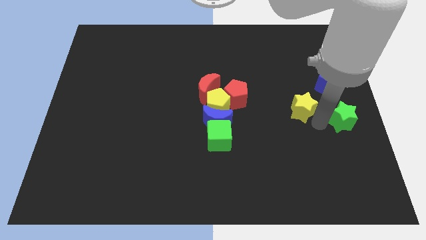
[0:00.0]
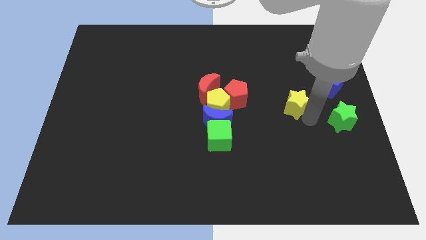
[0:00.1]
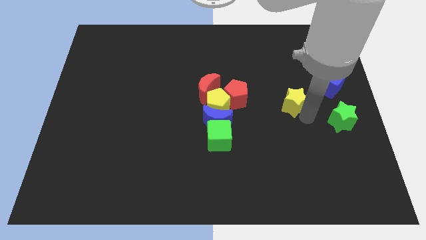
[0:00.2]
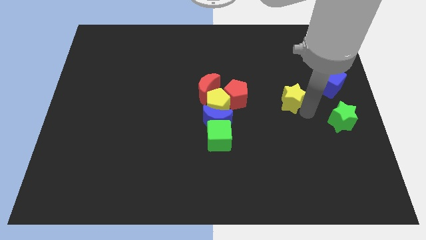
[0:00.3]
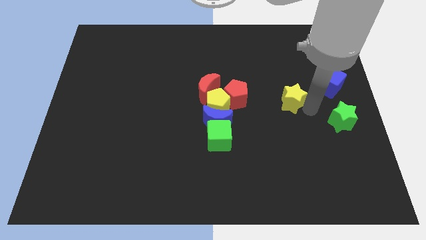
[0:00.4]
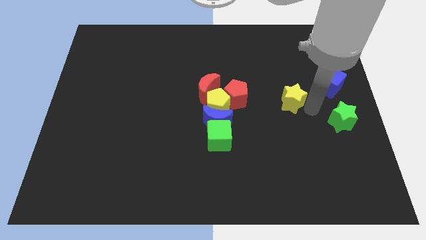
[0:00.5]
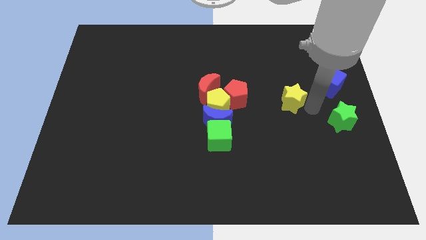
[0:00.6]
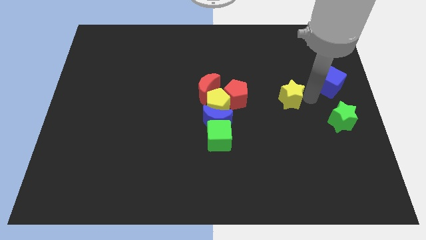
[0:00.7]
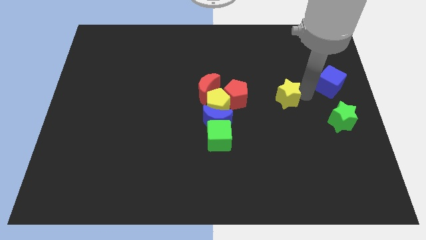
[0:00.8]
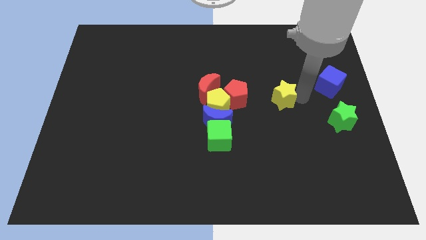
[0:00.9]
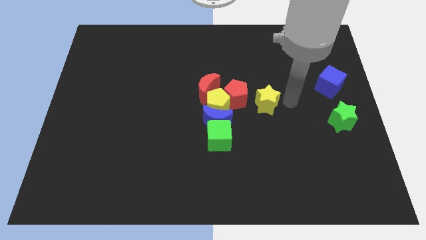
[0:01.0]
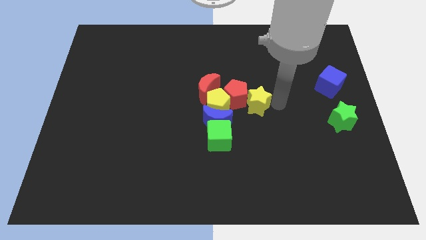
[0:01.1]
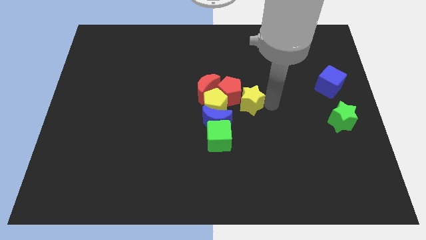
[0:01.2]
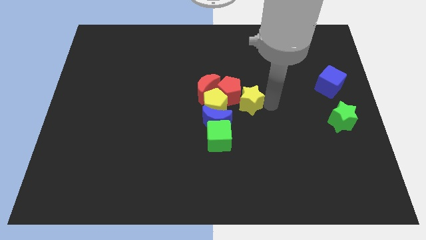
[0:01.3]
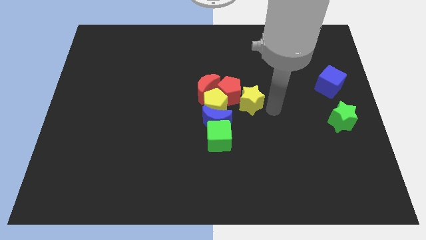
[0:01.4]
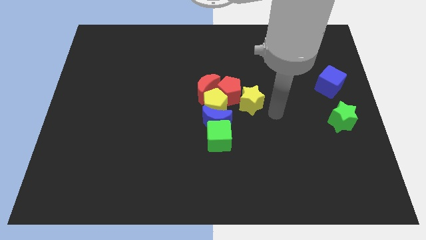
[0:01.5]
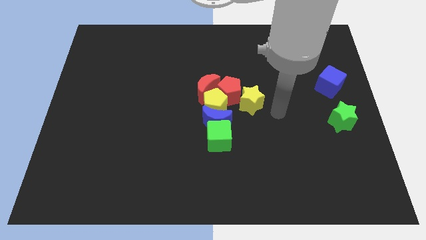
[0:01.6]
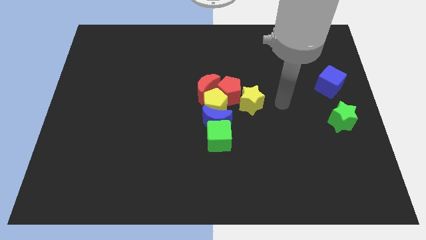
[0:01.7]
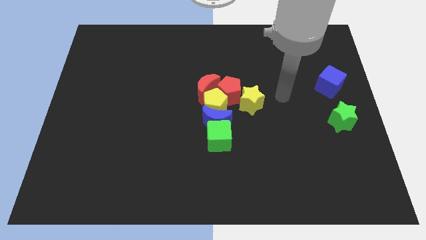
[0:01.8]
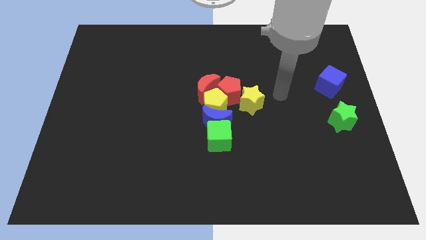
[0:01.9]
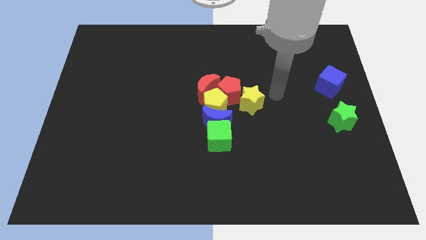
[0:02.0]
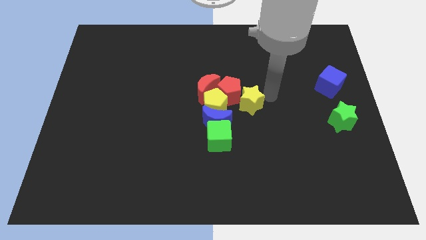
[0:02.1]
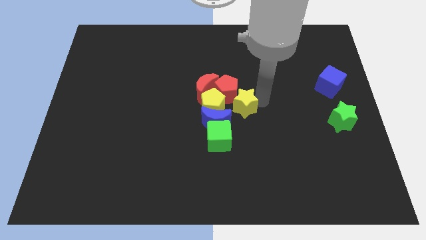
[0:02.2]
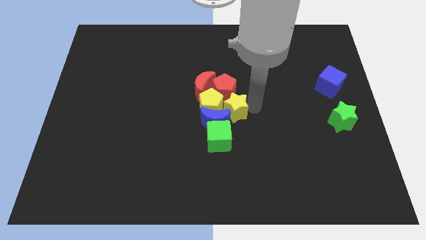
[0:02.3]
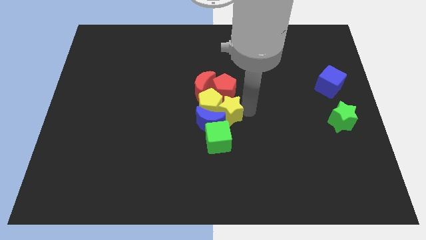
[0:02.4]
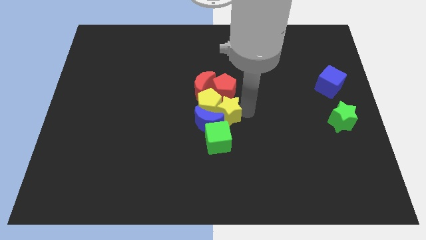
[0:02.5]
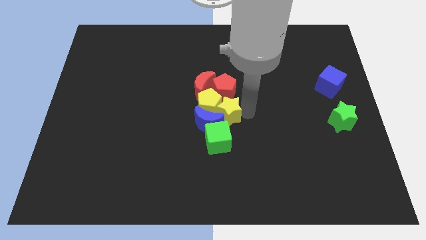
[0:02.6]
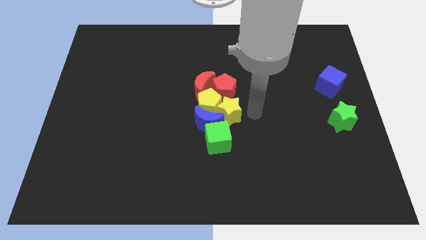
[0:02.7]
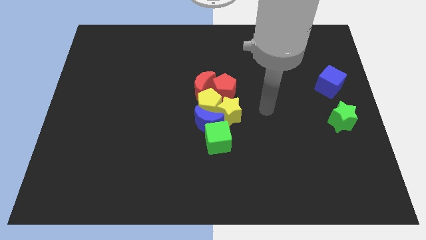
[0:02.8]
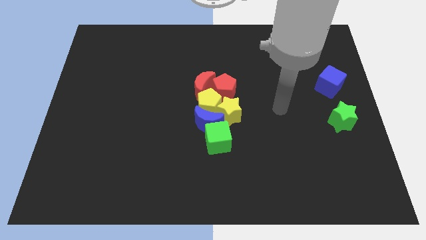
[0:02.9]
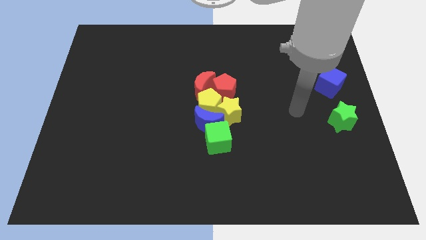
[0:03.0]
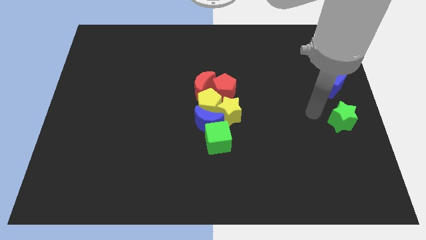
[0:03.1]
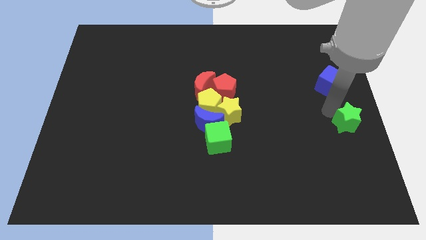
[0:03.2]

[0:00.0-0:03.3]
push the yellow star into the yellow pentagon

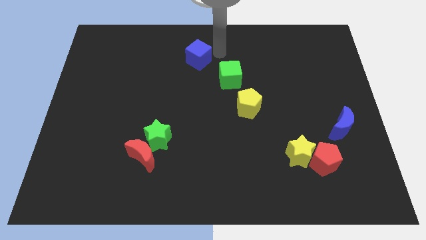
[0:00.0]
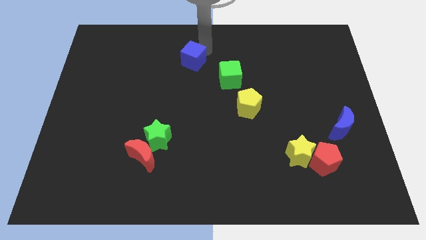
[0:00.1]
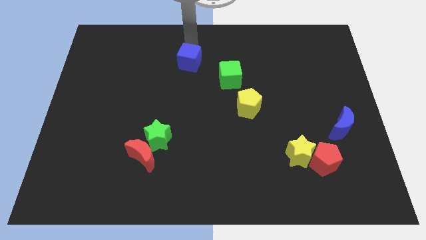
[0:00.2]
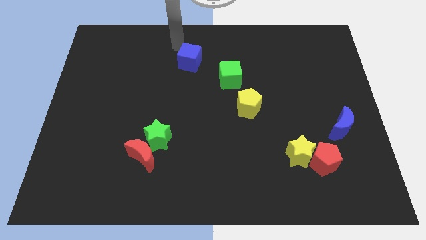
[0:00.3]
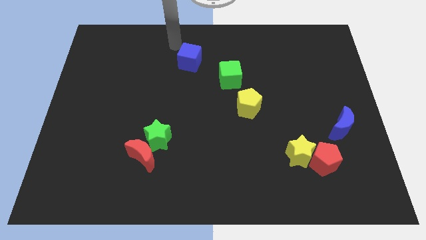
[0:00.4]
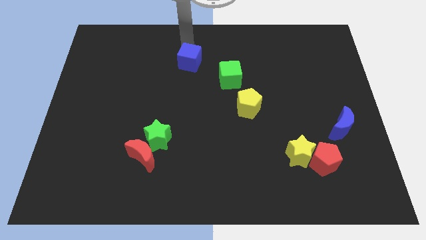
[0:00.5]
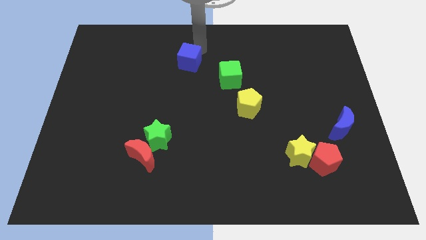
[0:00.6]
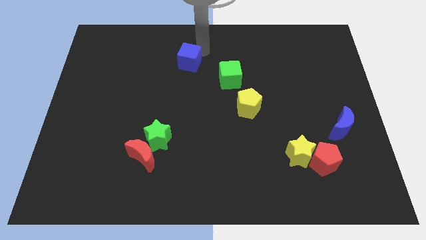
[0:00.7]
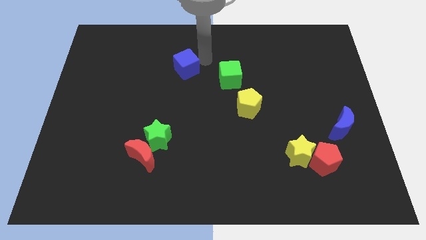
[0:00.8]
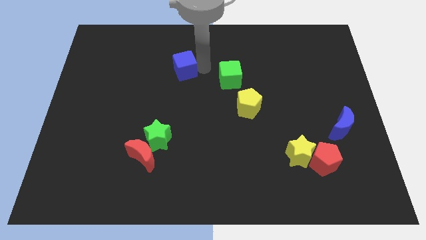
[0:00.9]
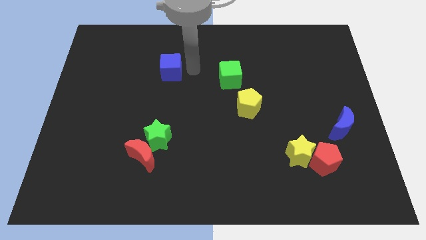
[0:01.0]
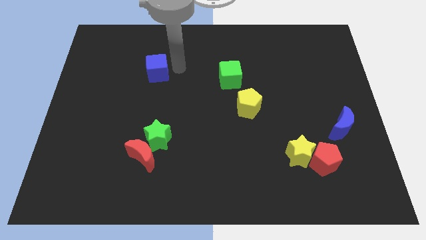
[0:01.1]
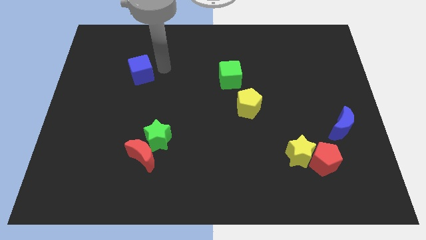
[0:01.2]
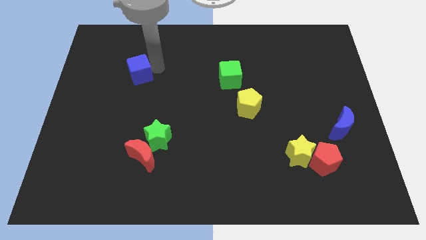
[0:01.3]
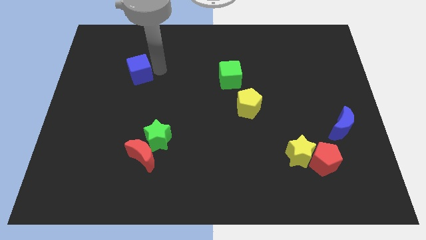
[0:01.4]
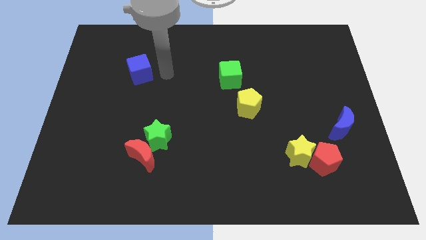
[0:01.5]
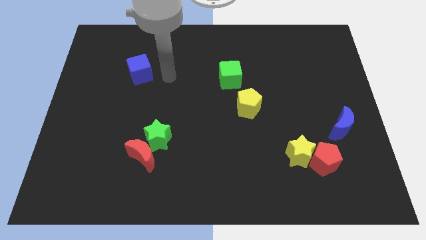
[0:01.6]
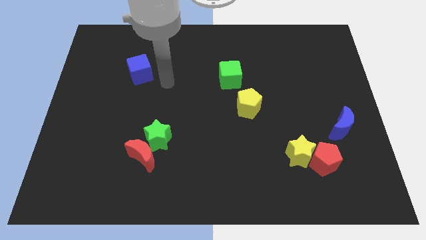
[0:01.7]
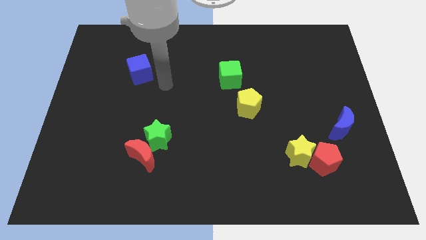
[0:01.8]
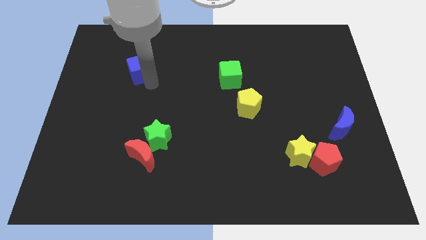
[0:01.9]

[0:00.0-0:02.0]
push the blue cube to the left side of the board

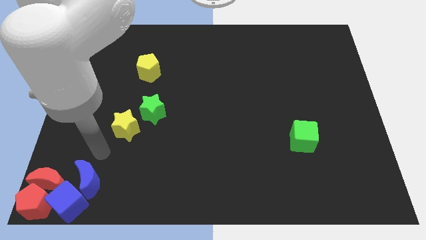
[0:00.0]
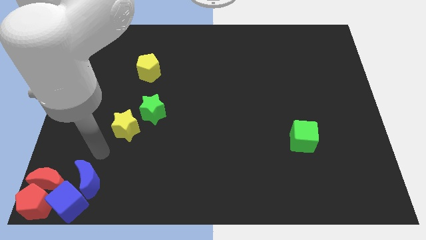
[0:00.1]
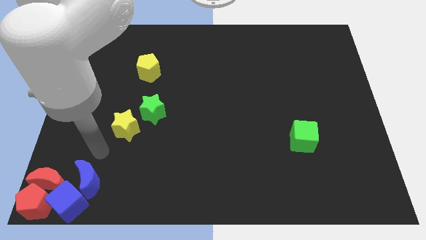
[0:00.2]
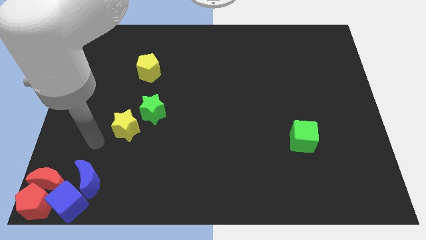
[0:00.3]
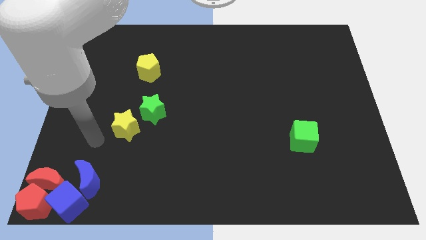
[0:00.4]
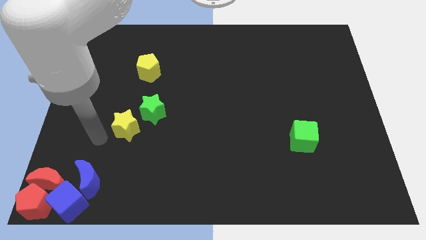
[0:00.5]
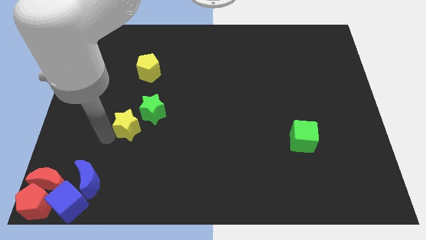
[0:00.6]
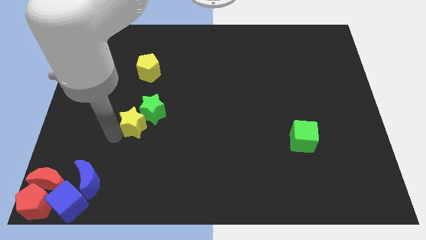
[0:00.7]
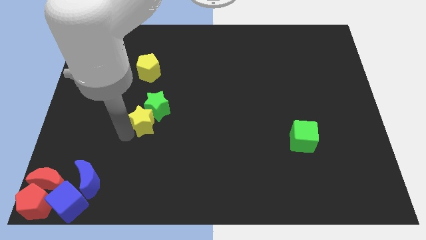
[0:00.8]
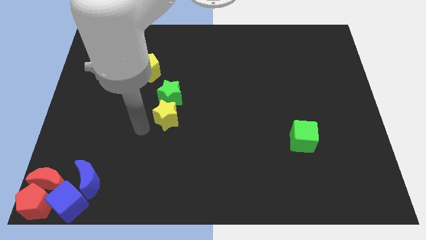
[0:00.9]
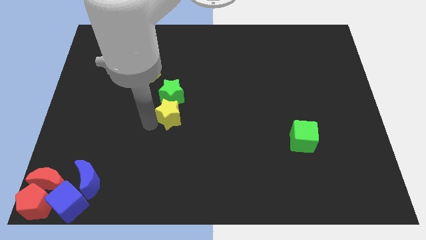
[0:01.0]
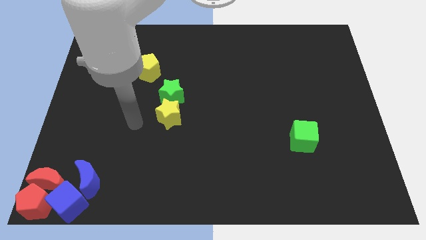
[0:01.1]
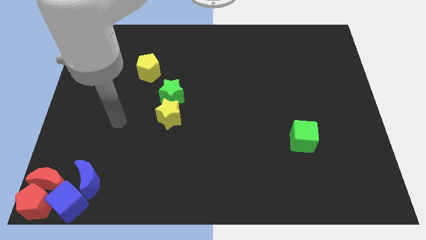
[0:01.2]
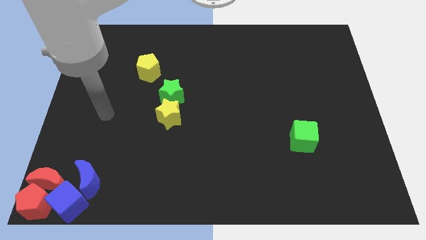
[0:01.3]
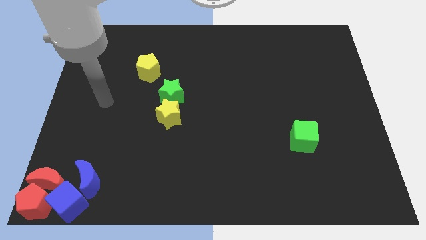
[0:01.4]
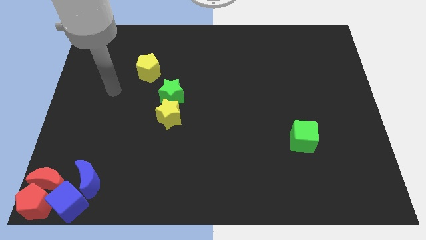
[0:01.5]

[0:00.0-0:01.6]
push the yellow star into the green star

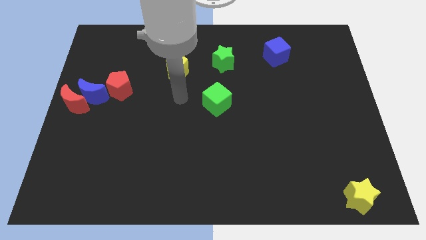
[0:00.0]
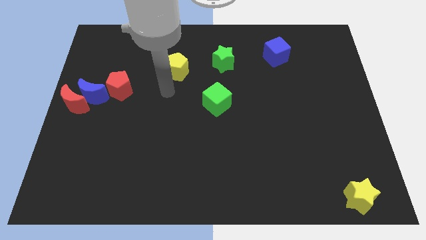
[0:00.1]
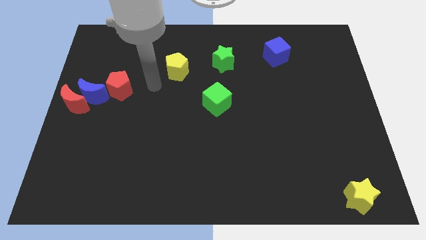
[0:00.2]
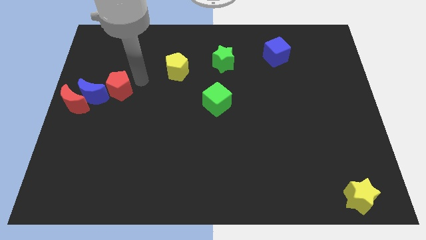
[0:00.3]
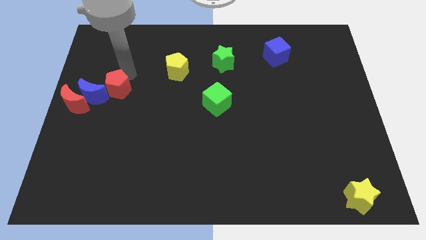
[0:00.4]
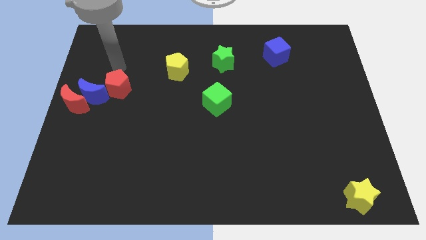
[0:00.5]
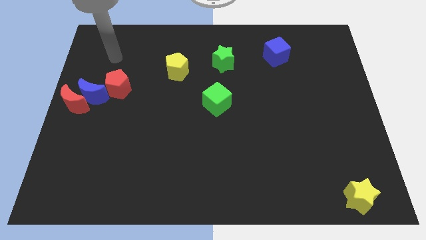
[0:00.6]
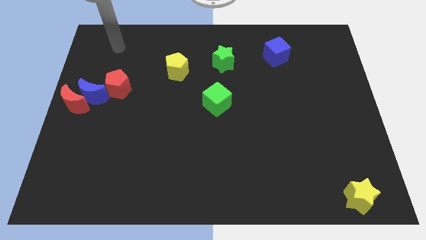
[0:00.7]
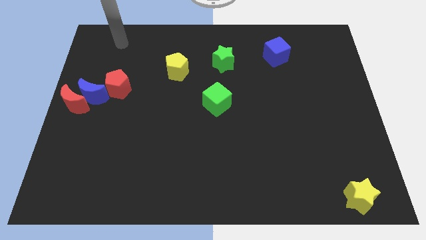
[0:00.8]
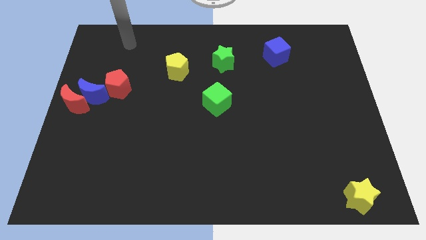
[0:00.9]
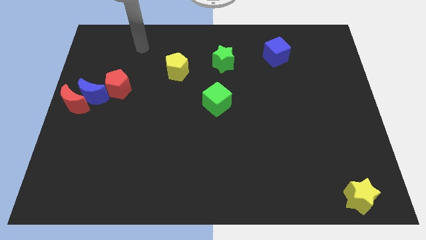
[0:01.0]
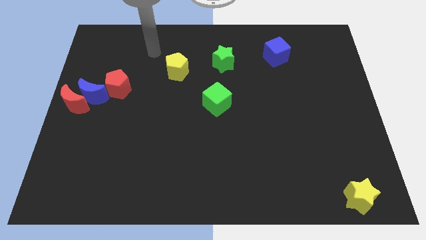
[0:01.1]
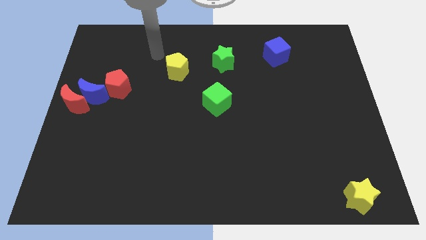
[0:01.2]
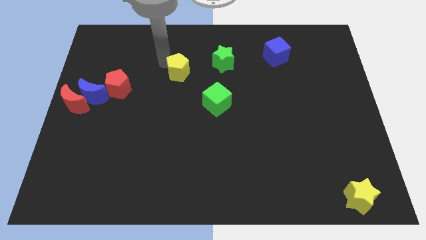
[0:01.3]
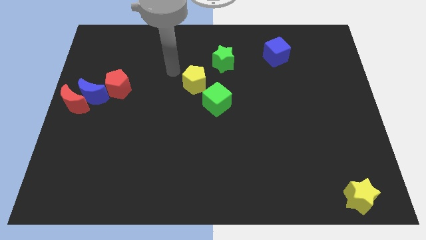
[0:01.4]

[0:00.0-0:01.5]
move the yellow pentagon to the top left of the green cube

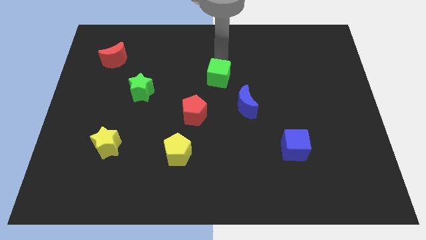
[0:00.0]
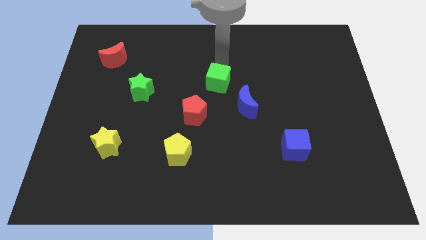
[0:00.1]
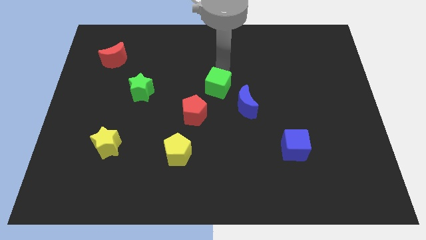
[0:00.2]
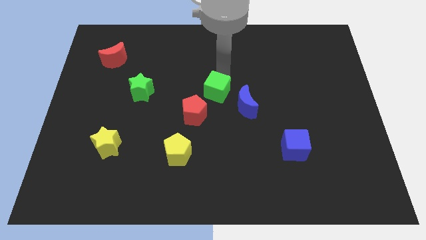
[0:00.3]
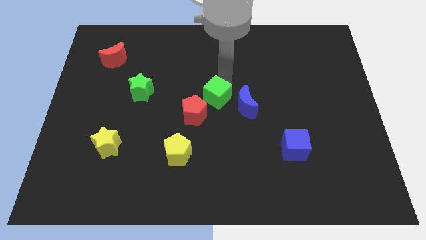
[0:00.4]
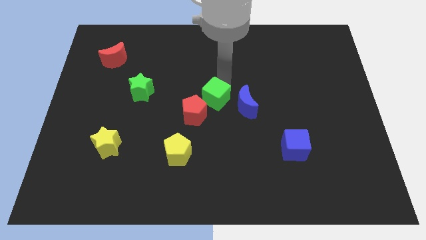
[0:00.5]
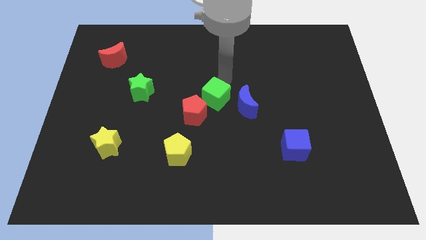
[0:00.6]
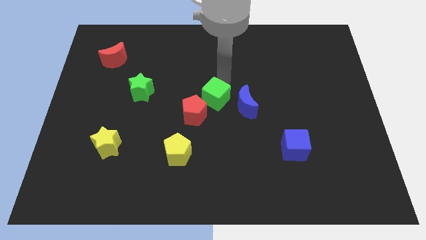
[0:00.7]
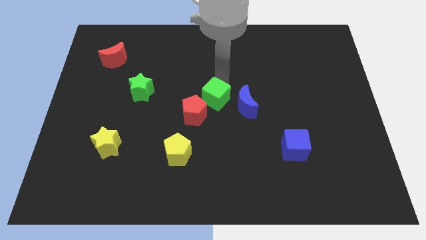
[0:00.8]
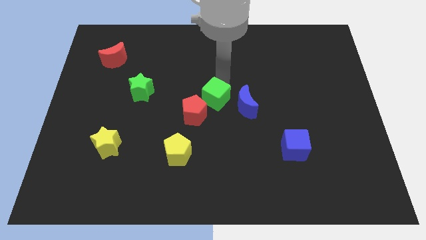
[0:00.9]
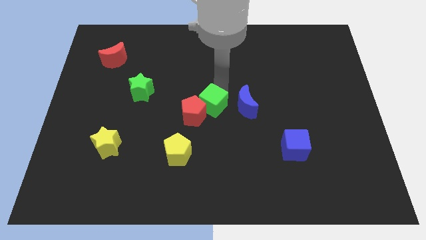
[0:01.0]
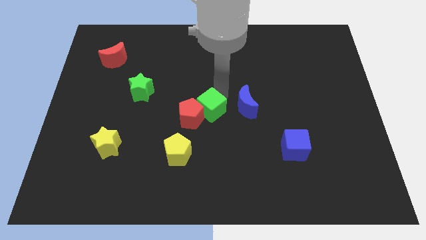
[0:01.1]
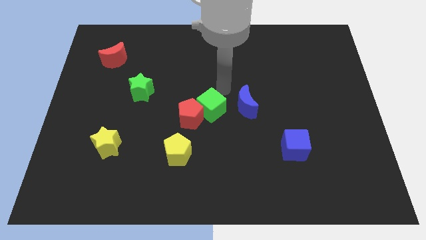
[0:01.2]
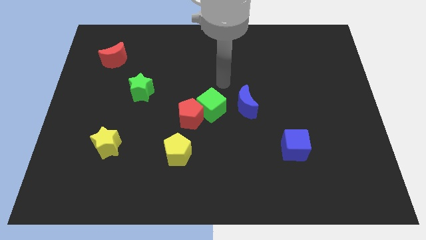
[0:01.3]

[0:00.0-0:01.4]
push the green cube to the left of the blue crescent at the center of the board
